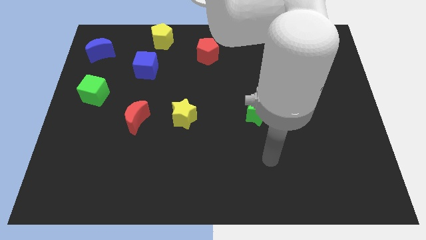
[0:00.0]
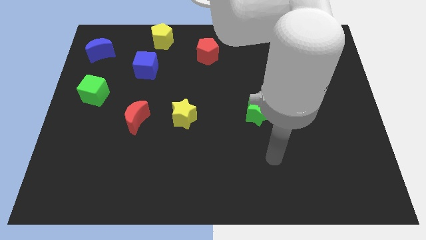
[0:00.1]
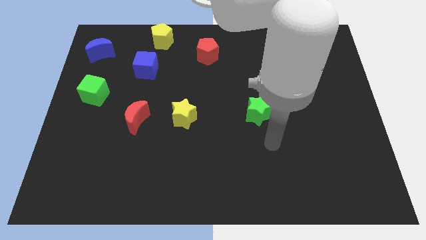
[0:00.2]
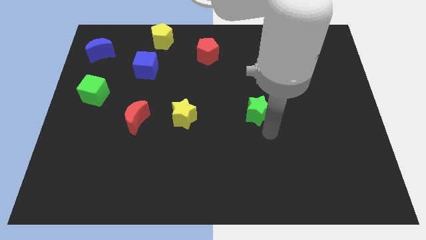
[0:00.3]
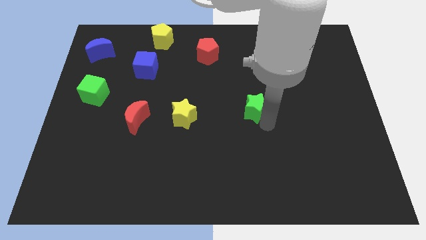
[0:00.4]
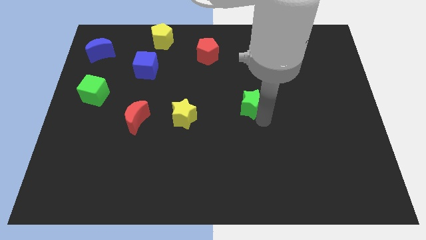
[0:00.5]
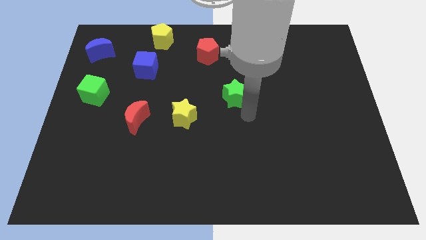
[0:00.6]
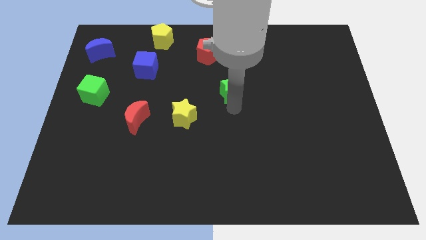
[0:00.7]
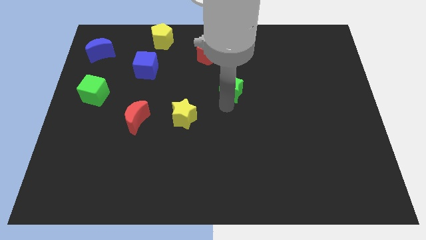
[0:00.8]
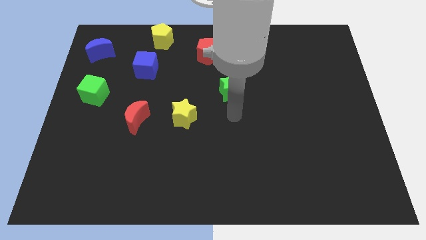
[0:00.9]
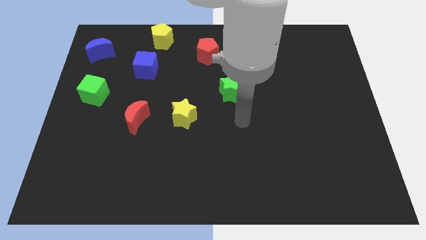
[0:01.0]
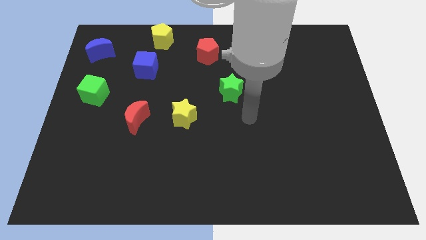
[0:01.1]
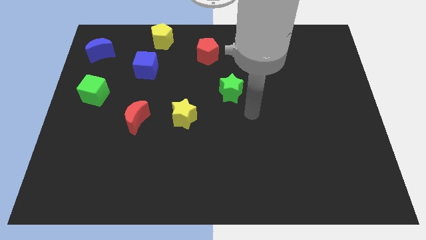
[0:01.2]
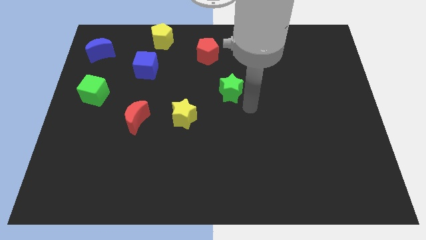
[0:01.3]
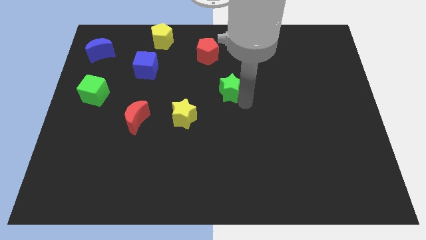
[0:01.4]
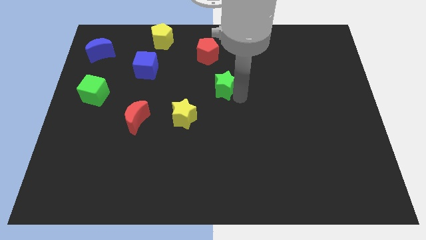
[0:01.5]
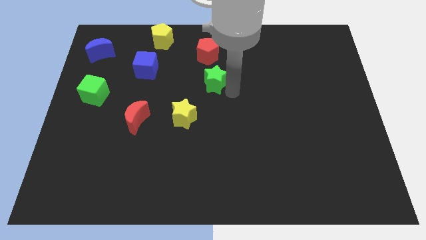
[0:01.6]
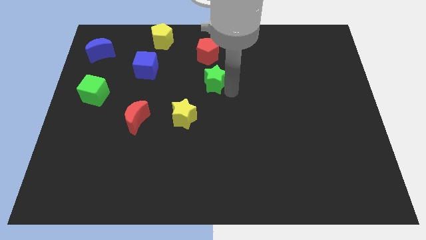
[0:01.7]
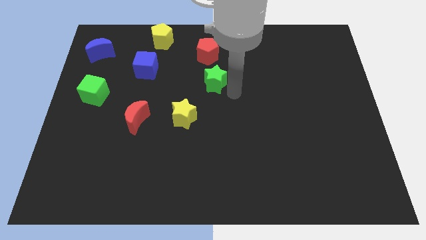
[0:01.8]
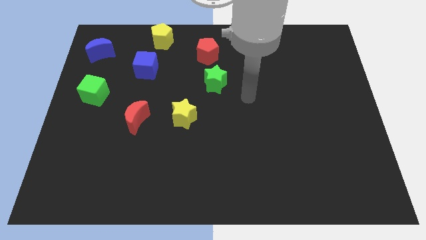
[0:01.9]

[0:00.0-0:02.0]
push the green star to the bottom of the red pentagon

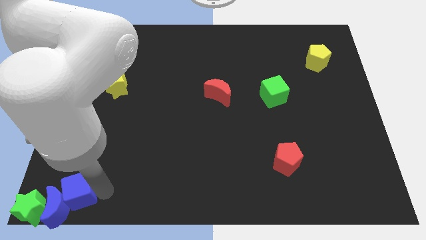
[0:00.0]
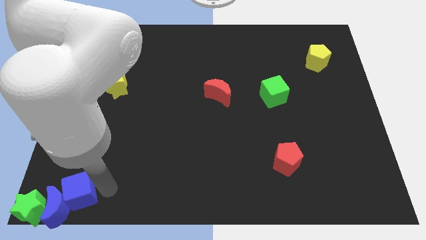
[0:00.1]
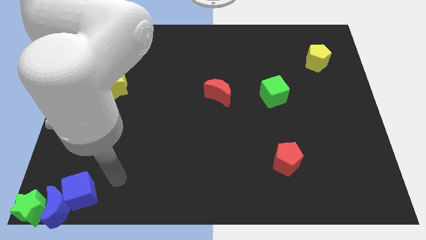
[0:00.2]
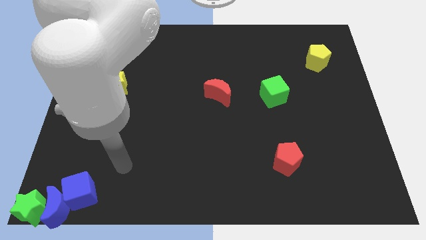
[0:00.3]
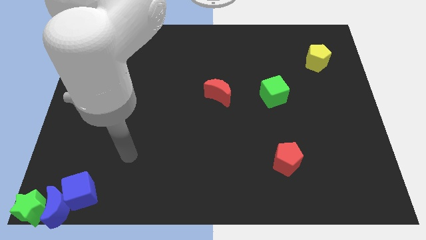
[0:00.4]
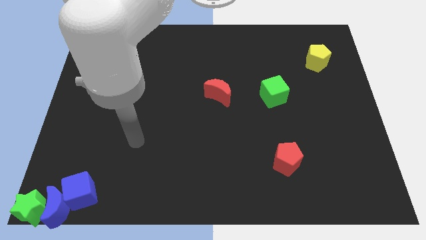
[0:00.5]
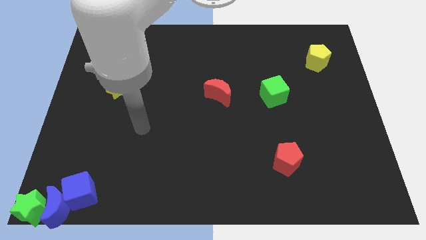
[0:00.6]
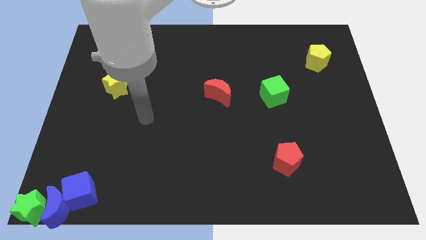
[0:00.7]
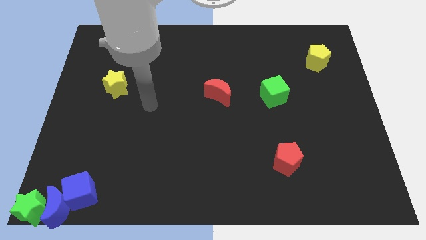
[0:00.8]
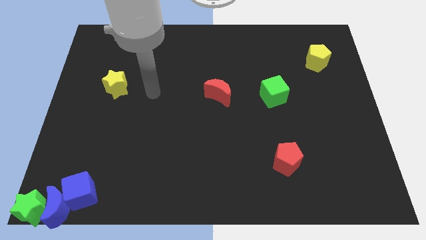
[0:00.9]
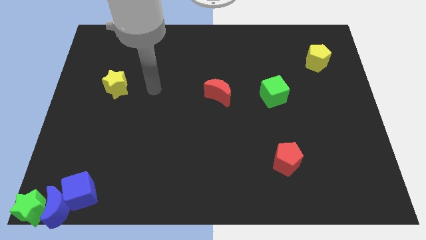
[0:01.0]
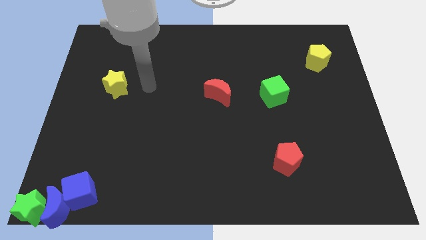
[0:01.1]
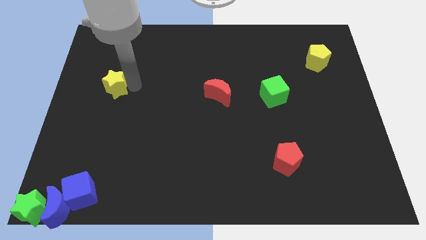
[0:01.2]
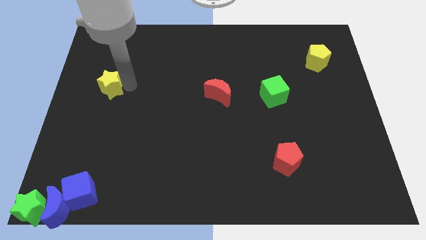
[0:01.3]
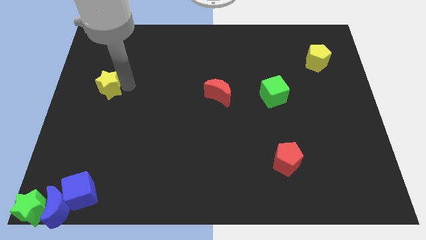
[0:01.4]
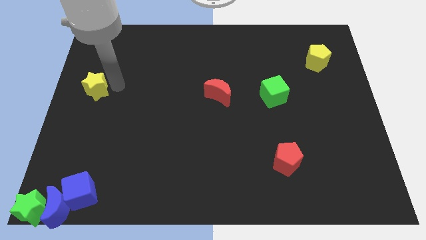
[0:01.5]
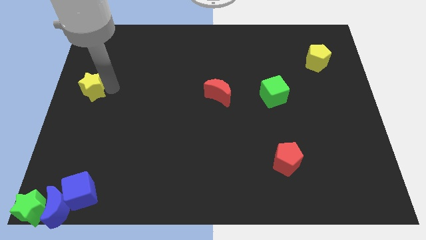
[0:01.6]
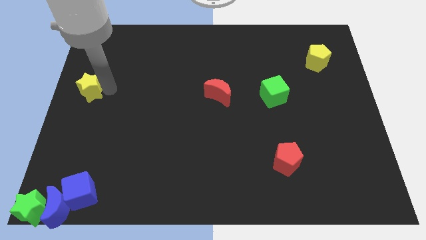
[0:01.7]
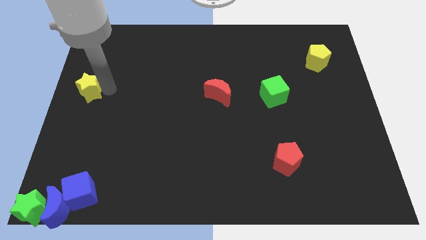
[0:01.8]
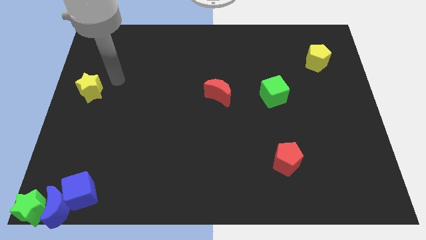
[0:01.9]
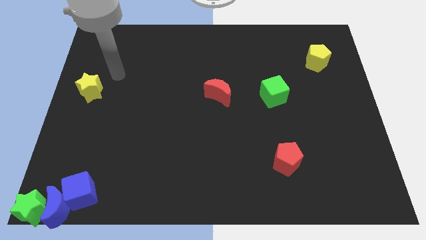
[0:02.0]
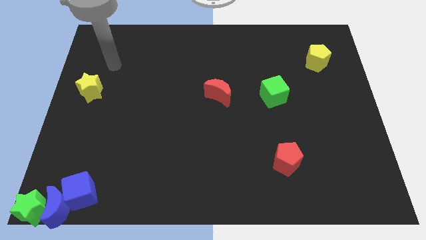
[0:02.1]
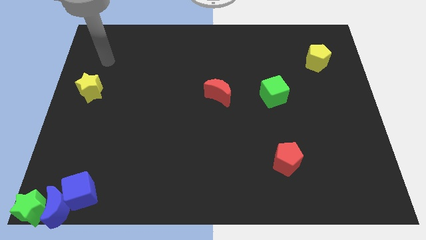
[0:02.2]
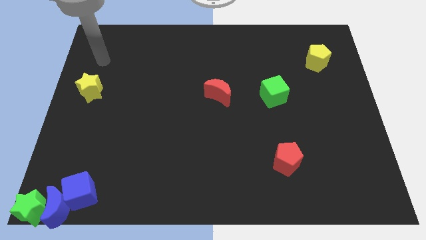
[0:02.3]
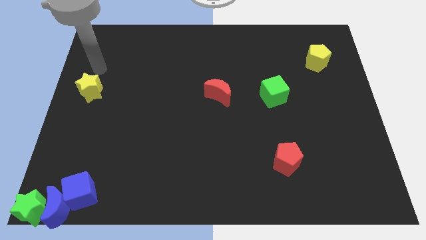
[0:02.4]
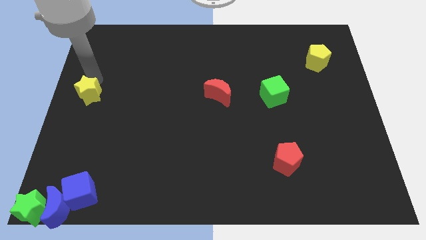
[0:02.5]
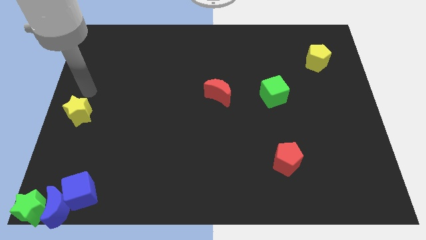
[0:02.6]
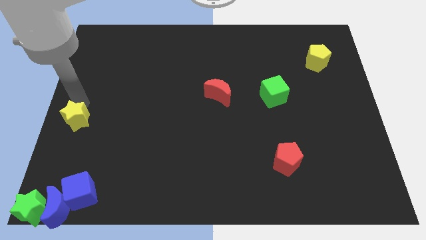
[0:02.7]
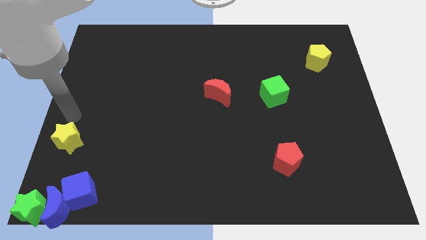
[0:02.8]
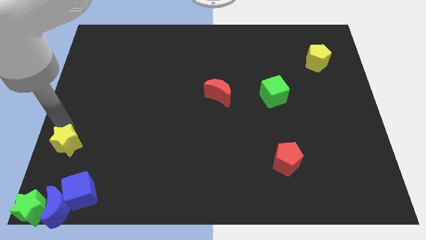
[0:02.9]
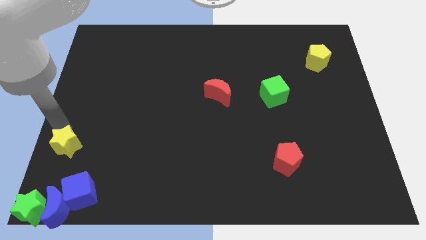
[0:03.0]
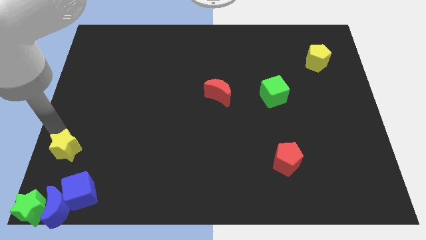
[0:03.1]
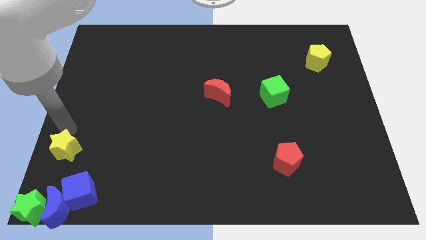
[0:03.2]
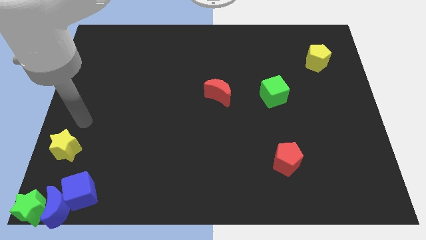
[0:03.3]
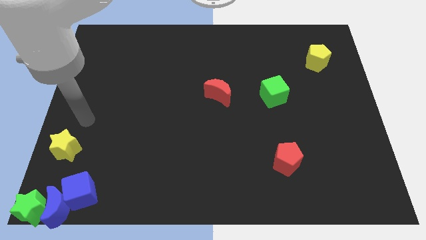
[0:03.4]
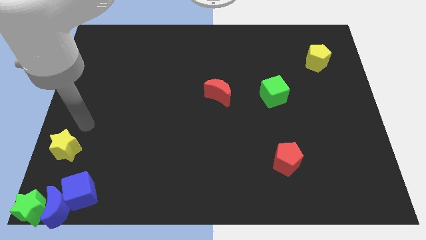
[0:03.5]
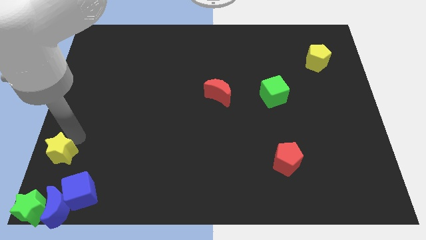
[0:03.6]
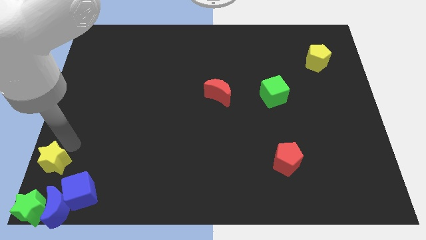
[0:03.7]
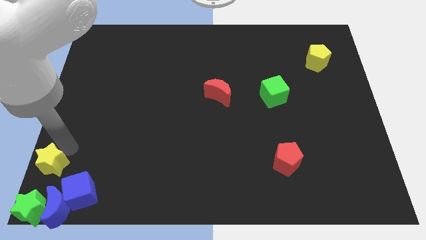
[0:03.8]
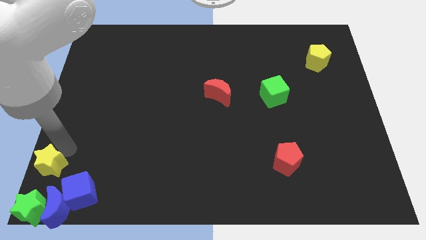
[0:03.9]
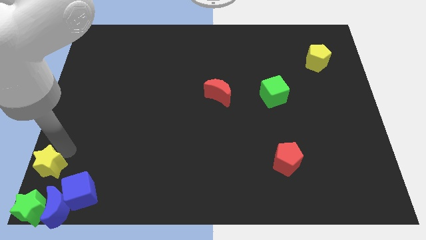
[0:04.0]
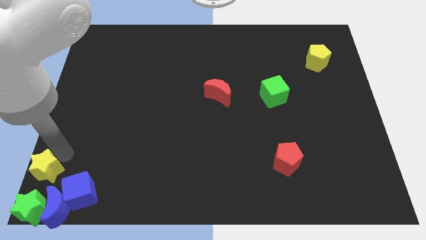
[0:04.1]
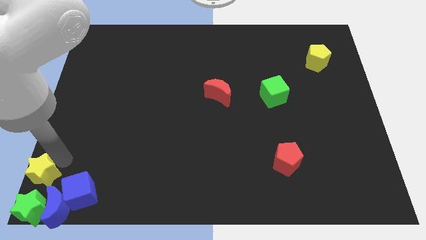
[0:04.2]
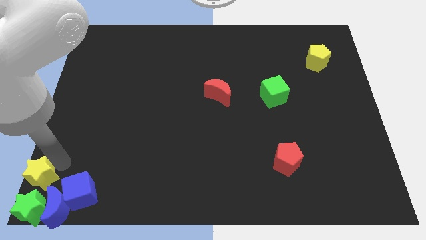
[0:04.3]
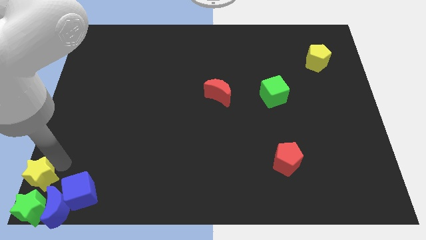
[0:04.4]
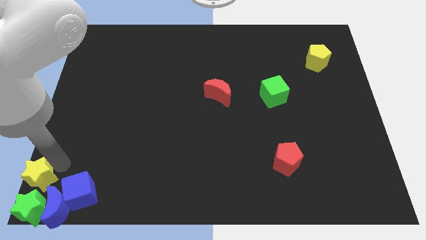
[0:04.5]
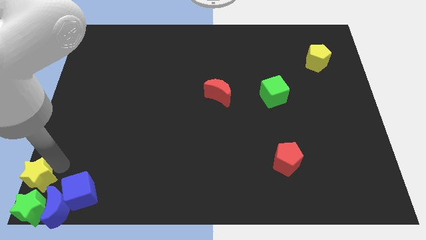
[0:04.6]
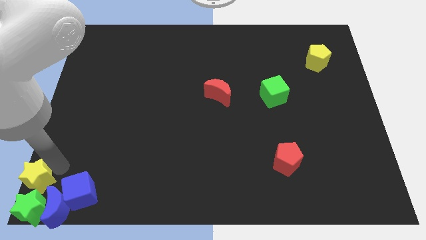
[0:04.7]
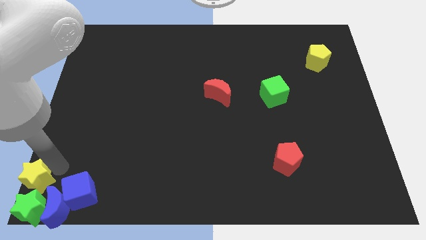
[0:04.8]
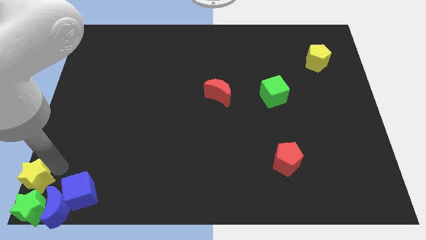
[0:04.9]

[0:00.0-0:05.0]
move the yellow star close to the top side of the green star

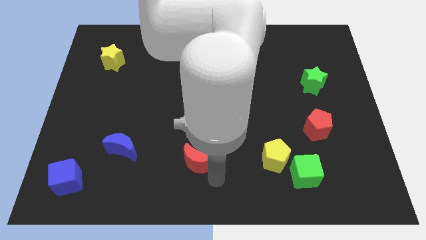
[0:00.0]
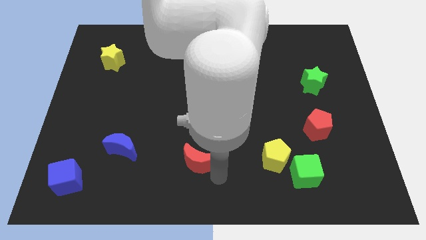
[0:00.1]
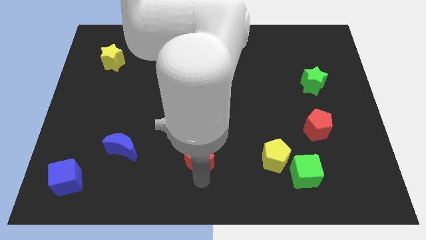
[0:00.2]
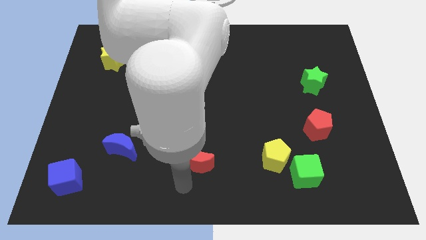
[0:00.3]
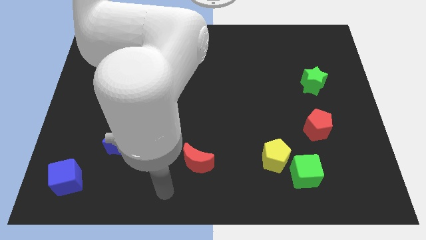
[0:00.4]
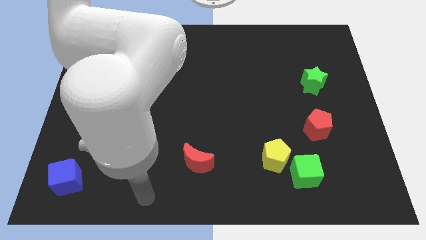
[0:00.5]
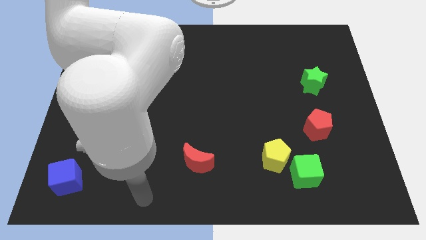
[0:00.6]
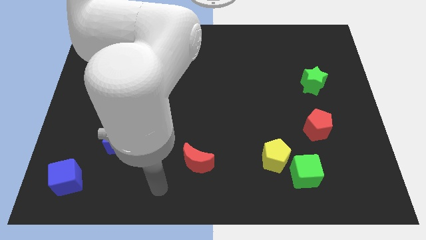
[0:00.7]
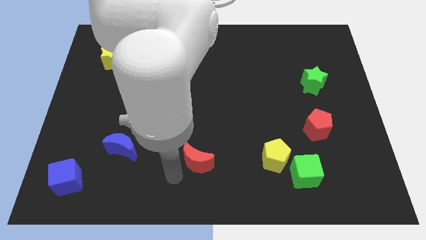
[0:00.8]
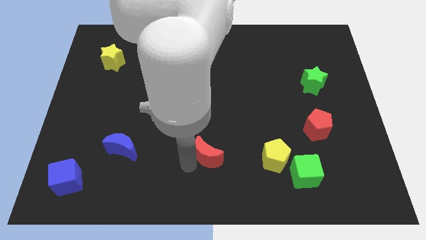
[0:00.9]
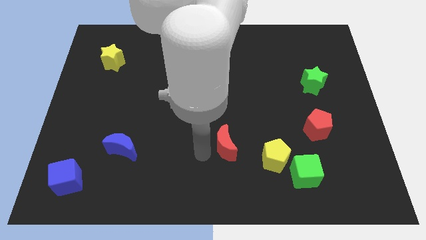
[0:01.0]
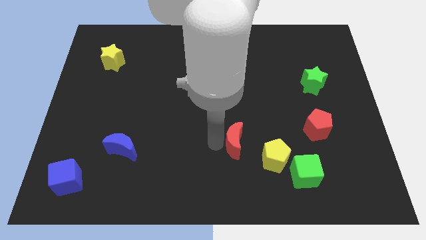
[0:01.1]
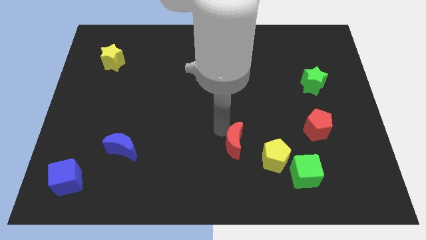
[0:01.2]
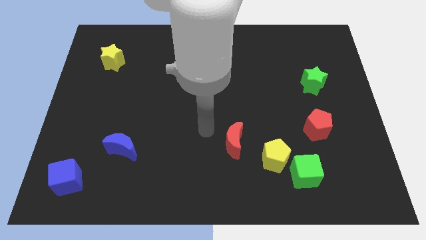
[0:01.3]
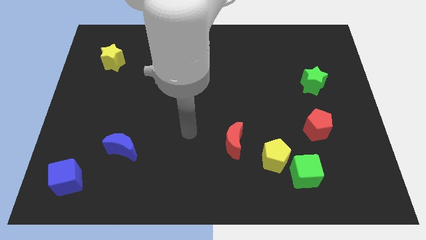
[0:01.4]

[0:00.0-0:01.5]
move red moon to the left of yellow pentagon

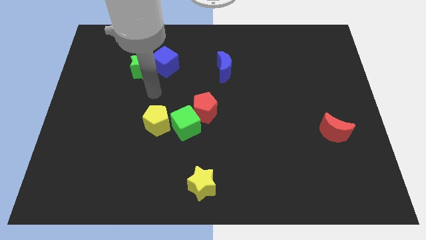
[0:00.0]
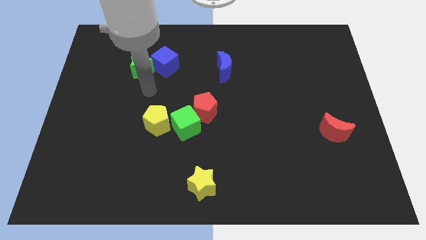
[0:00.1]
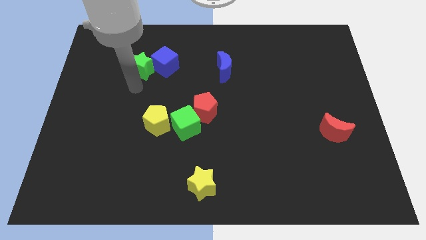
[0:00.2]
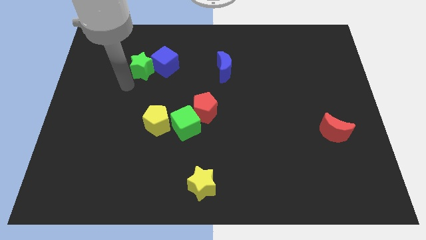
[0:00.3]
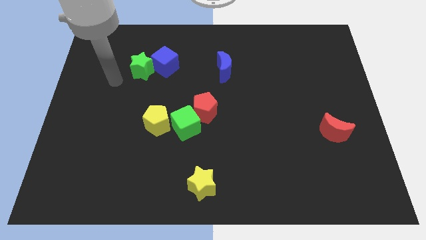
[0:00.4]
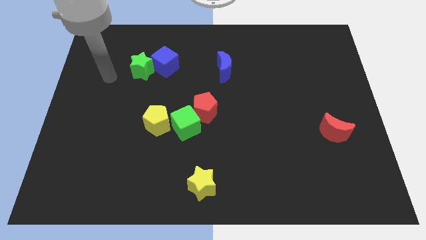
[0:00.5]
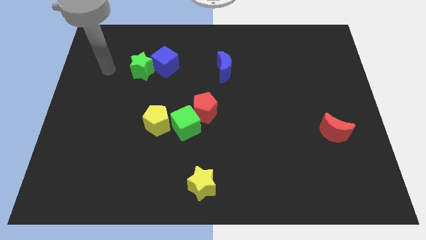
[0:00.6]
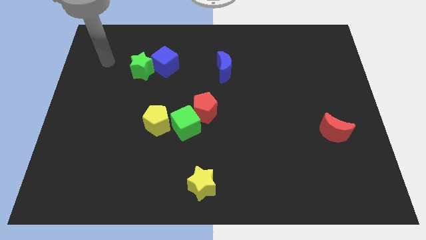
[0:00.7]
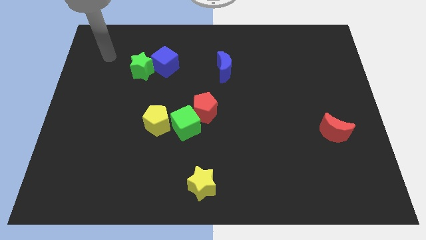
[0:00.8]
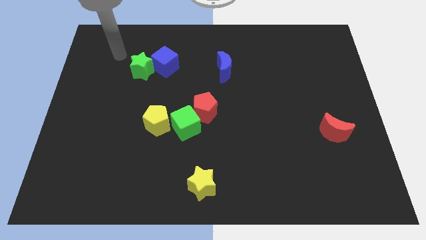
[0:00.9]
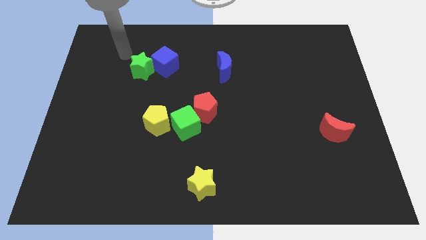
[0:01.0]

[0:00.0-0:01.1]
slide your arm to the top left of green star
